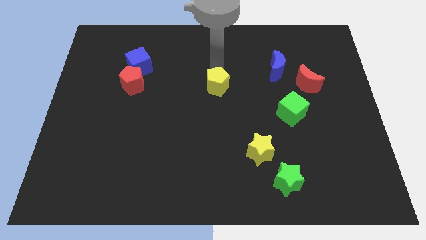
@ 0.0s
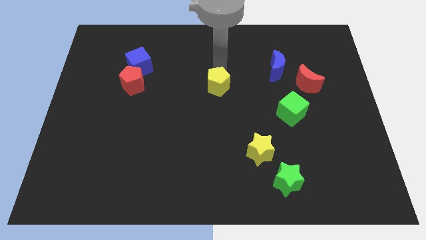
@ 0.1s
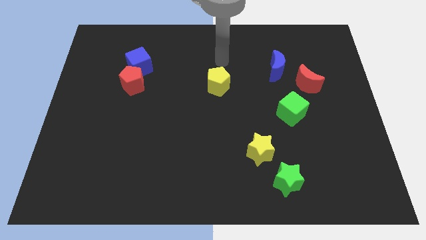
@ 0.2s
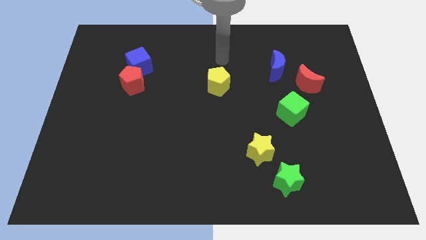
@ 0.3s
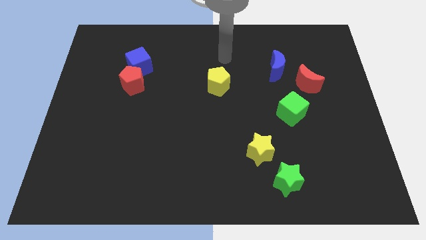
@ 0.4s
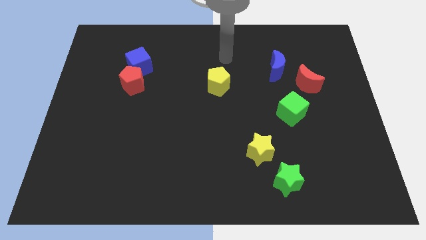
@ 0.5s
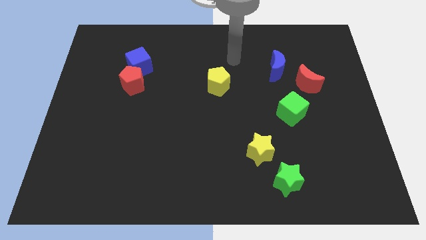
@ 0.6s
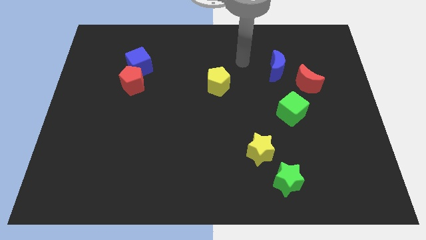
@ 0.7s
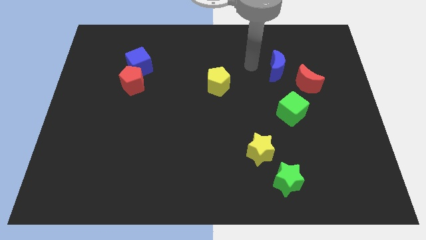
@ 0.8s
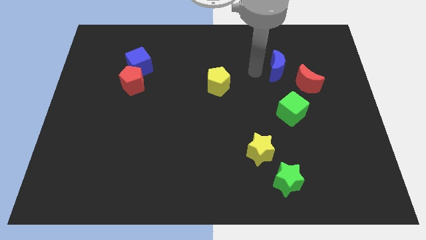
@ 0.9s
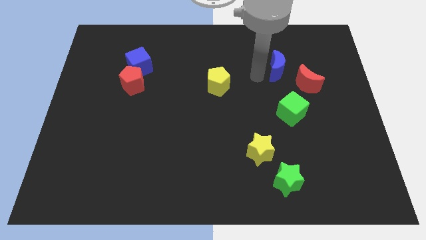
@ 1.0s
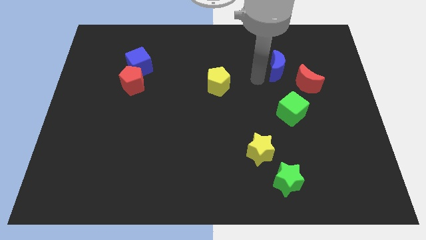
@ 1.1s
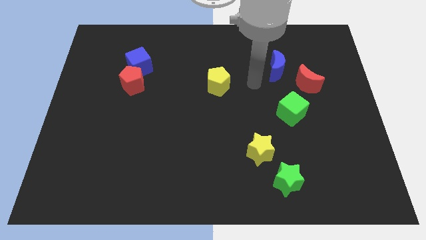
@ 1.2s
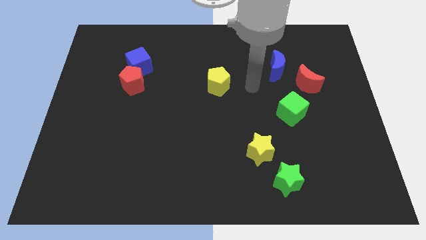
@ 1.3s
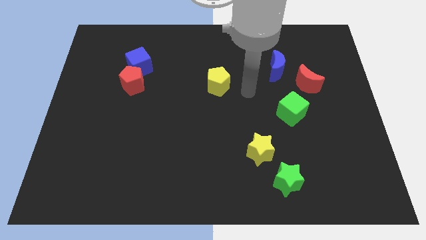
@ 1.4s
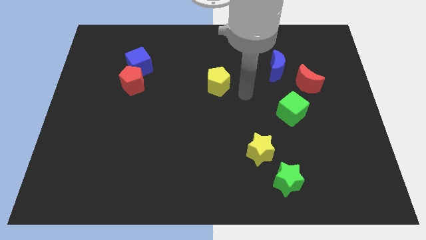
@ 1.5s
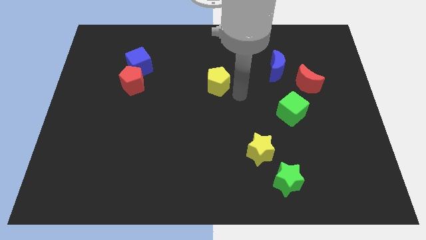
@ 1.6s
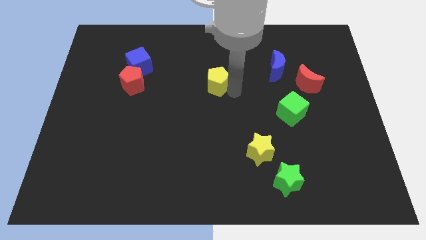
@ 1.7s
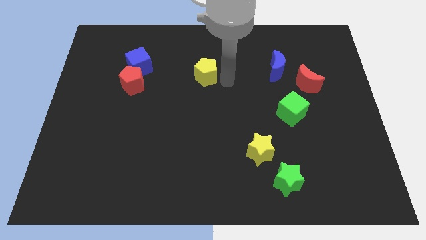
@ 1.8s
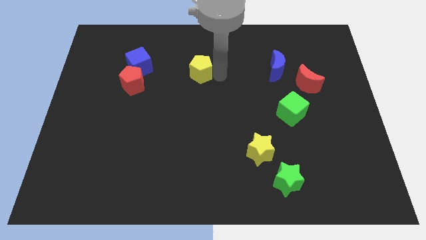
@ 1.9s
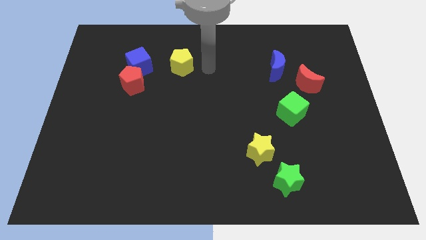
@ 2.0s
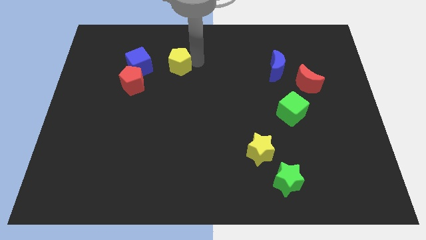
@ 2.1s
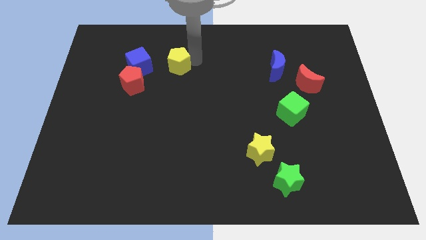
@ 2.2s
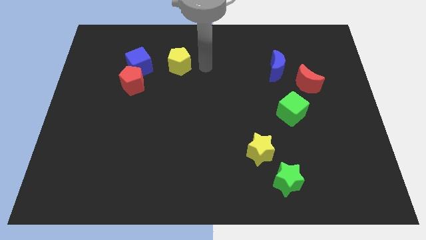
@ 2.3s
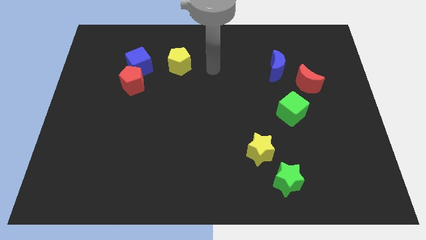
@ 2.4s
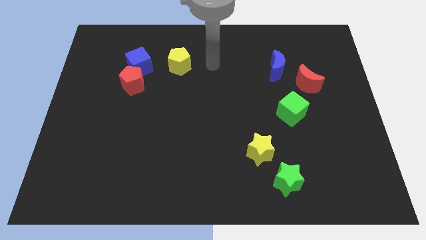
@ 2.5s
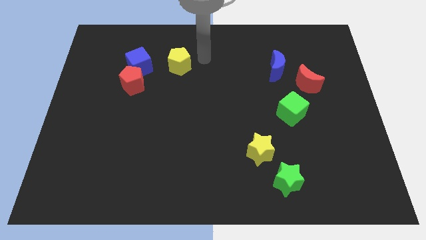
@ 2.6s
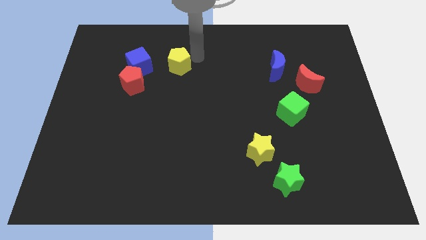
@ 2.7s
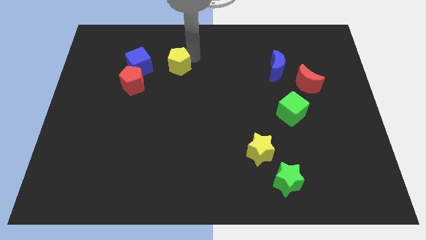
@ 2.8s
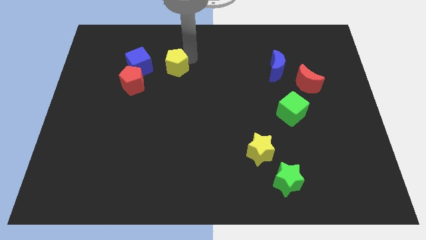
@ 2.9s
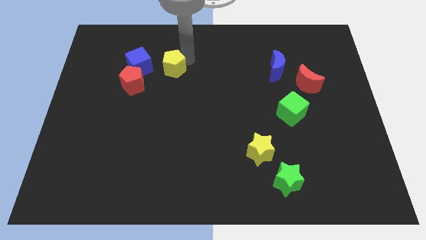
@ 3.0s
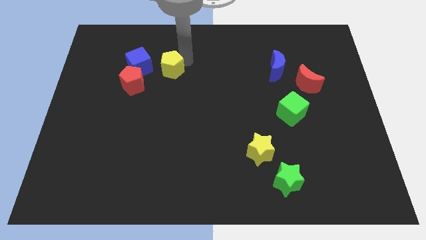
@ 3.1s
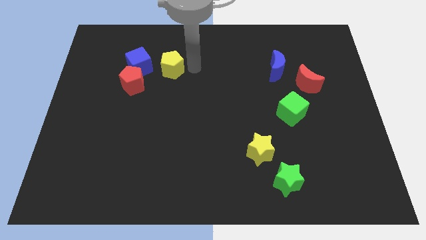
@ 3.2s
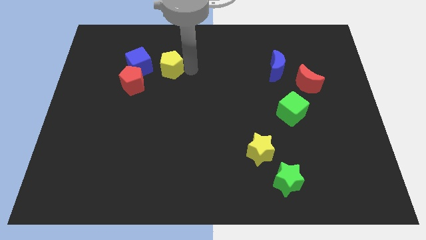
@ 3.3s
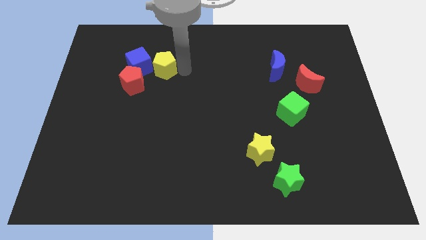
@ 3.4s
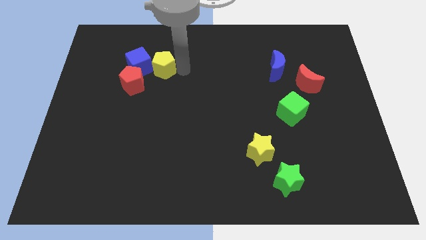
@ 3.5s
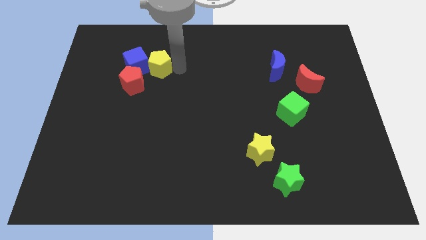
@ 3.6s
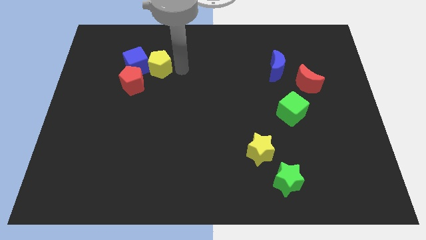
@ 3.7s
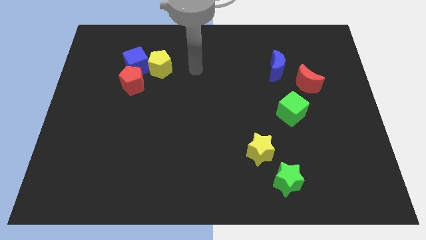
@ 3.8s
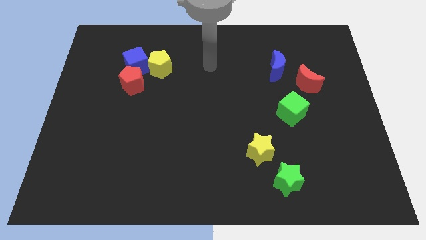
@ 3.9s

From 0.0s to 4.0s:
push the yellow pentagon into the blue cube

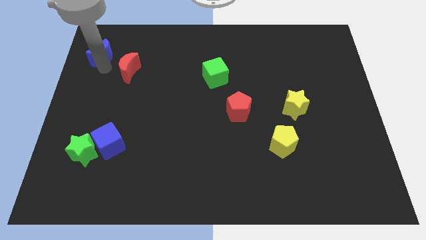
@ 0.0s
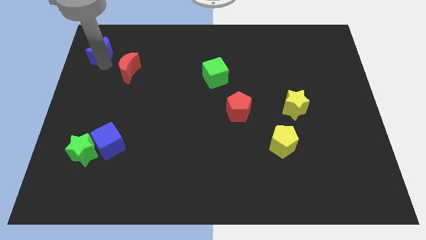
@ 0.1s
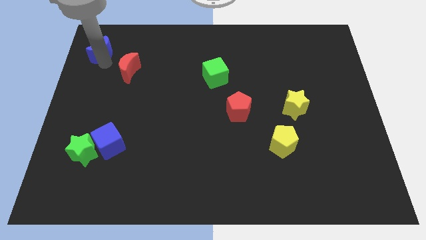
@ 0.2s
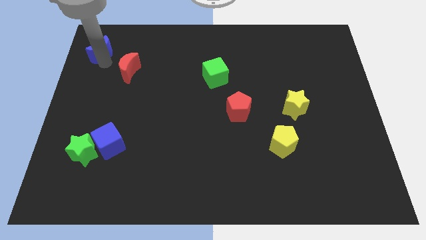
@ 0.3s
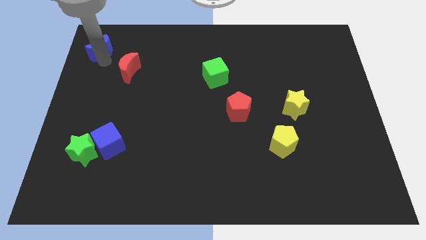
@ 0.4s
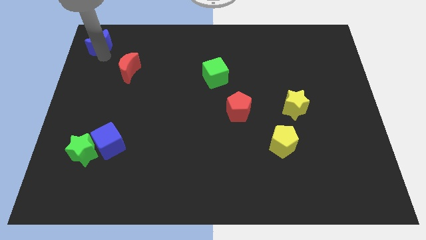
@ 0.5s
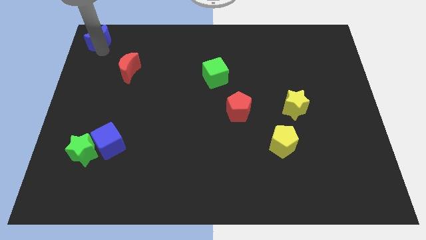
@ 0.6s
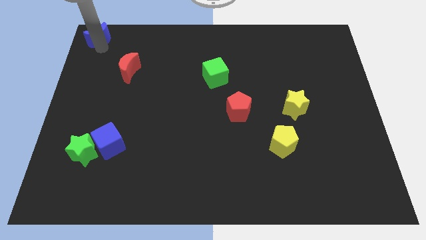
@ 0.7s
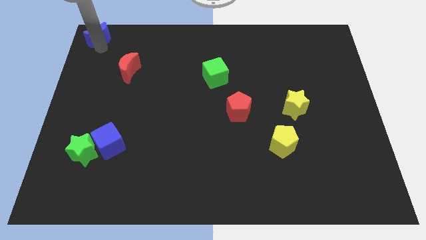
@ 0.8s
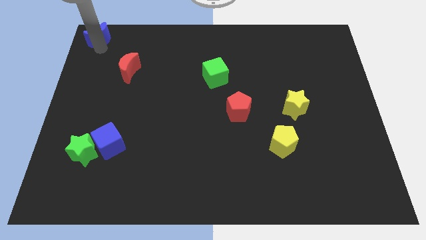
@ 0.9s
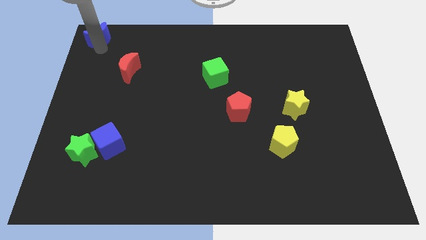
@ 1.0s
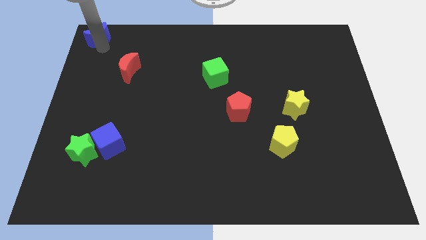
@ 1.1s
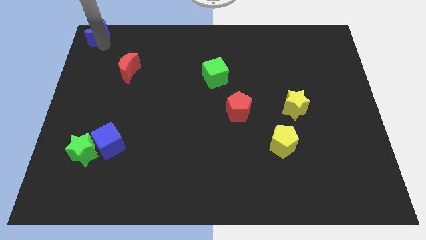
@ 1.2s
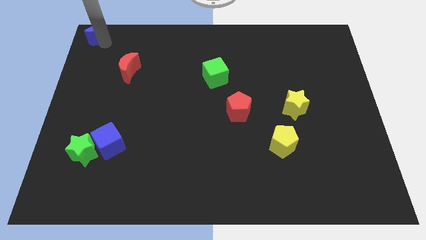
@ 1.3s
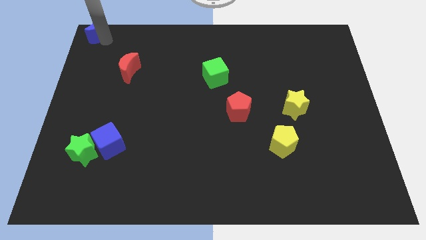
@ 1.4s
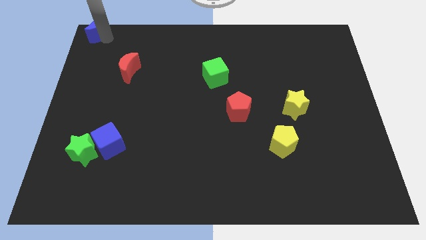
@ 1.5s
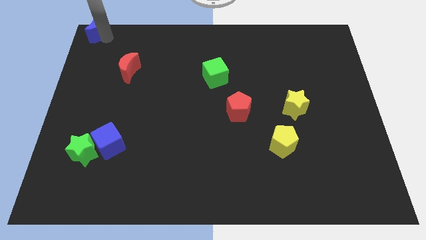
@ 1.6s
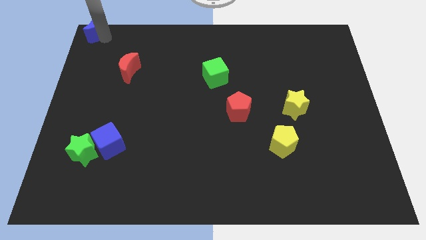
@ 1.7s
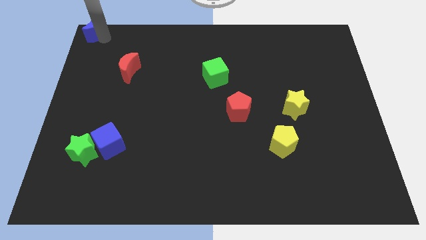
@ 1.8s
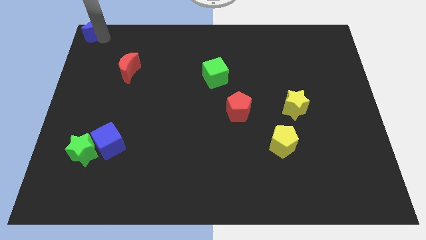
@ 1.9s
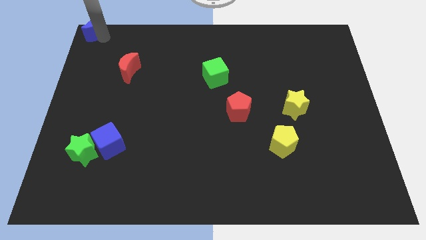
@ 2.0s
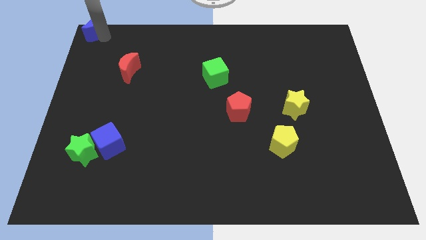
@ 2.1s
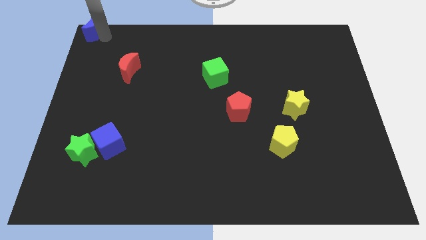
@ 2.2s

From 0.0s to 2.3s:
move the blue moon to the top left

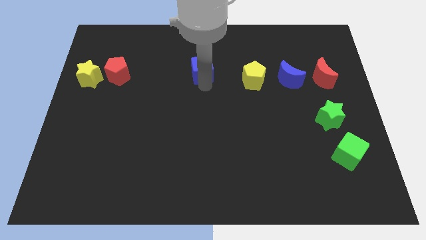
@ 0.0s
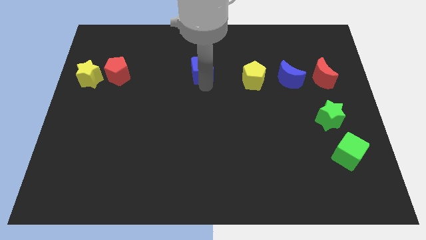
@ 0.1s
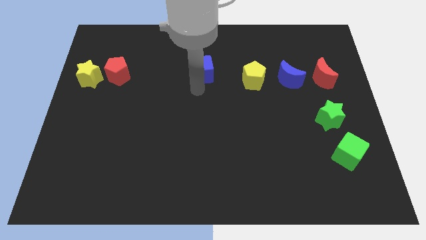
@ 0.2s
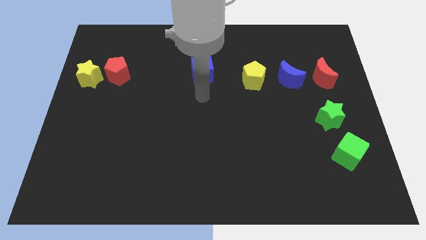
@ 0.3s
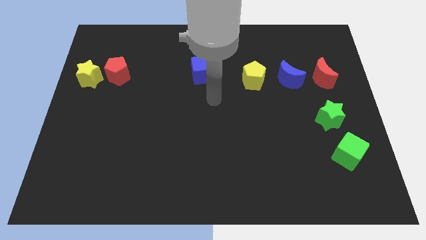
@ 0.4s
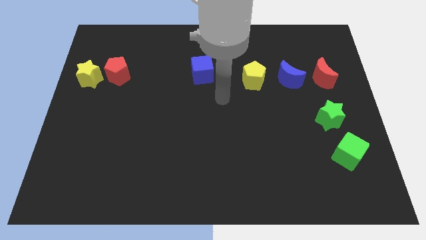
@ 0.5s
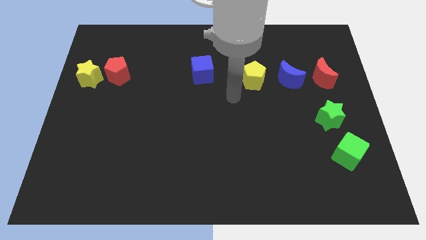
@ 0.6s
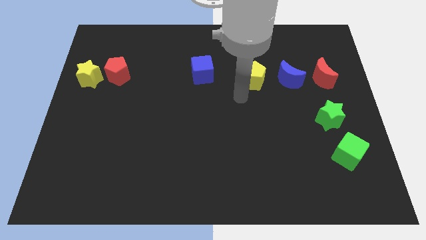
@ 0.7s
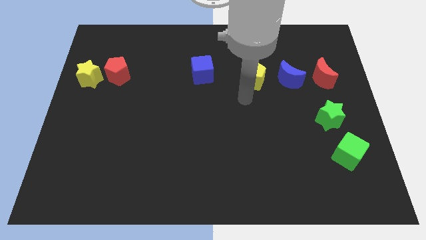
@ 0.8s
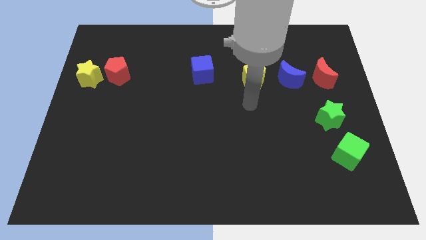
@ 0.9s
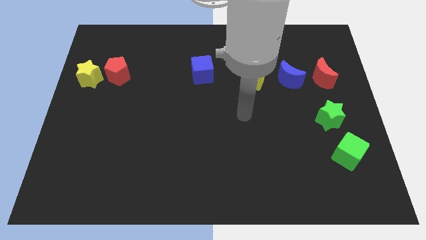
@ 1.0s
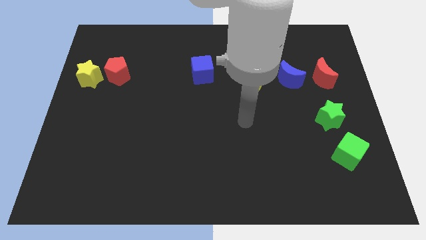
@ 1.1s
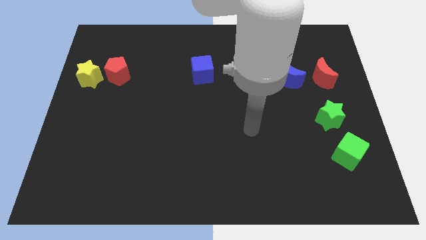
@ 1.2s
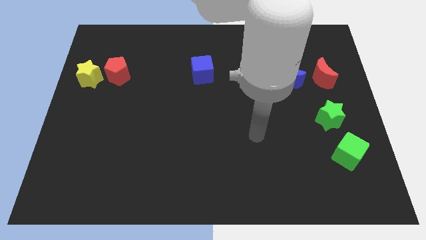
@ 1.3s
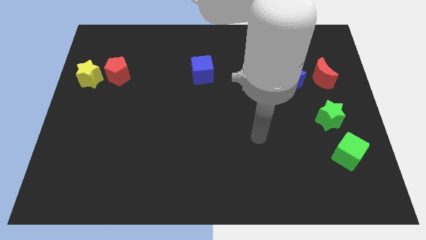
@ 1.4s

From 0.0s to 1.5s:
move your hand away from the blue cube

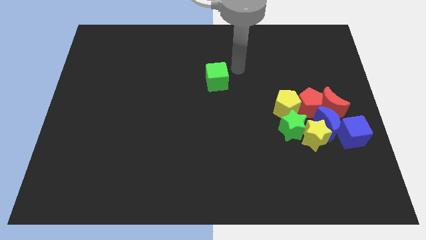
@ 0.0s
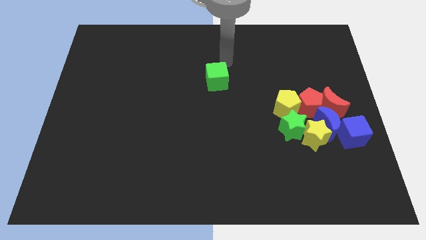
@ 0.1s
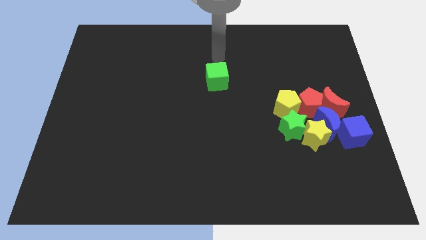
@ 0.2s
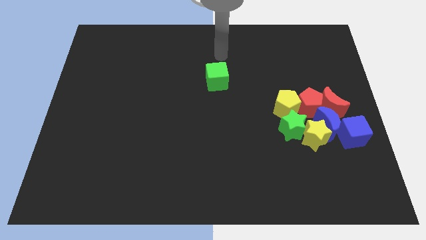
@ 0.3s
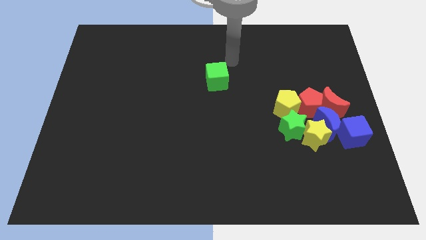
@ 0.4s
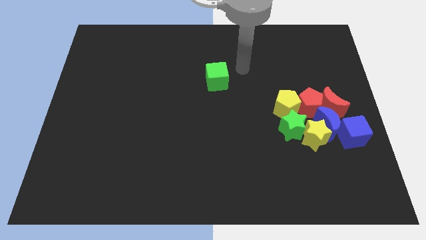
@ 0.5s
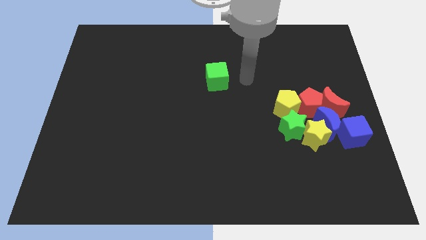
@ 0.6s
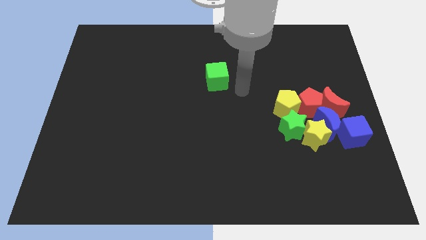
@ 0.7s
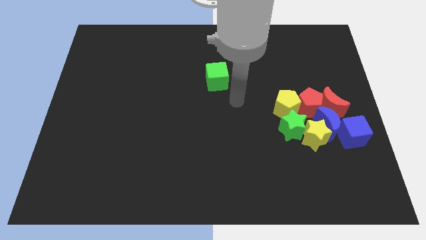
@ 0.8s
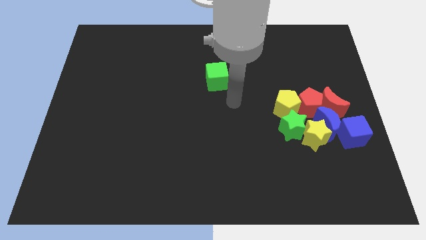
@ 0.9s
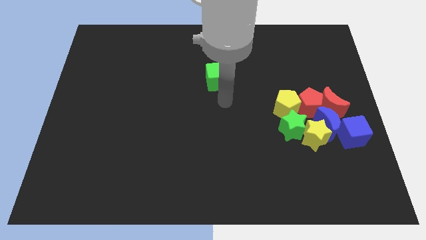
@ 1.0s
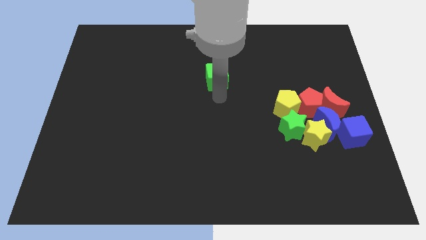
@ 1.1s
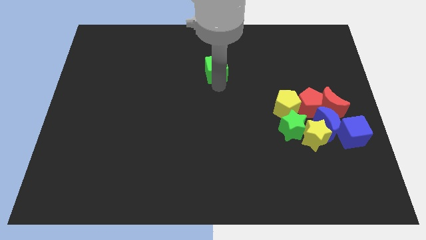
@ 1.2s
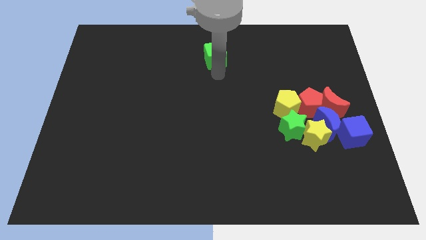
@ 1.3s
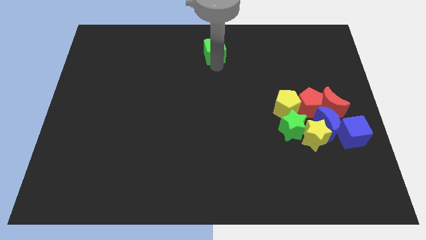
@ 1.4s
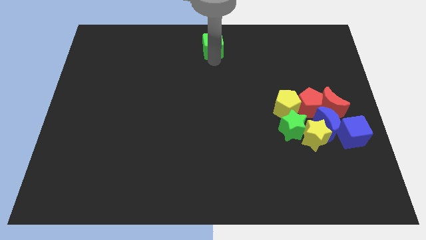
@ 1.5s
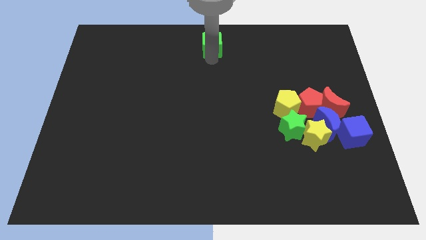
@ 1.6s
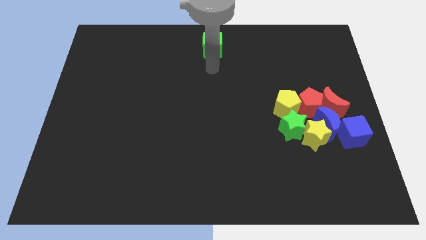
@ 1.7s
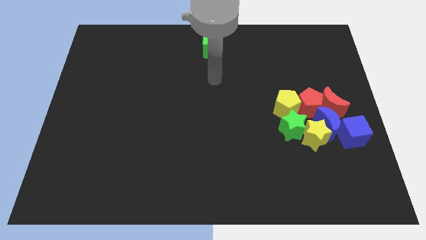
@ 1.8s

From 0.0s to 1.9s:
place the green cube to the top center of the board
